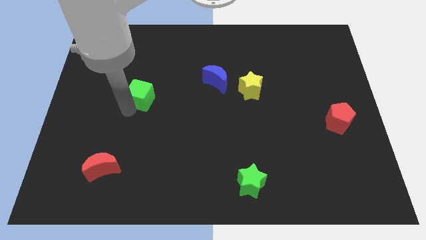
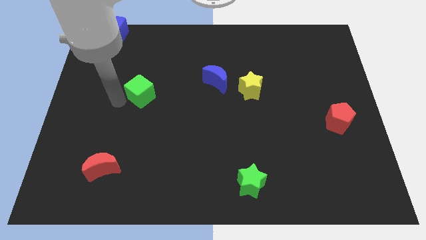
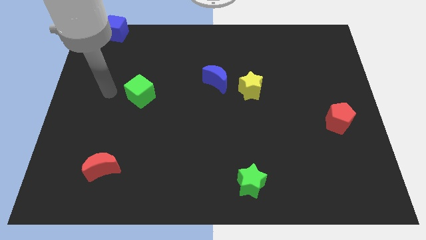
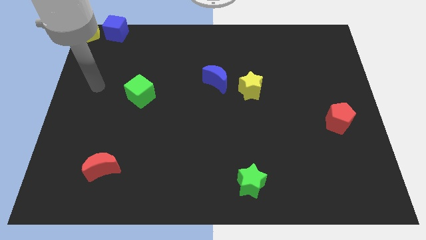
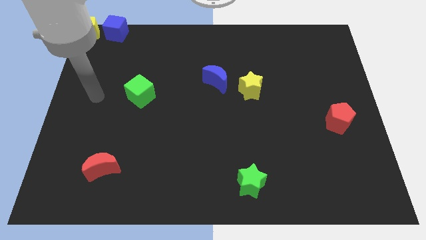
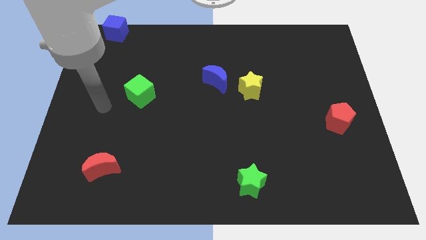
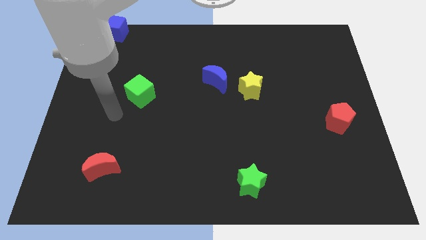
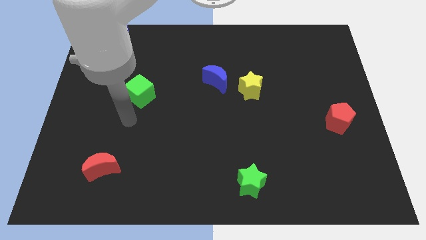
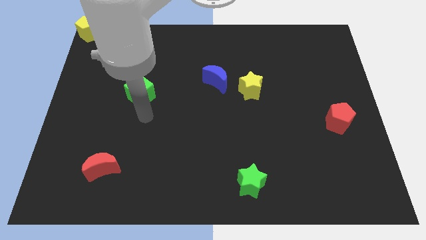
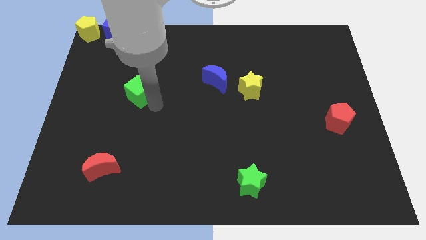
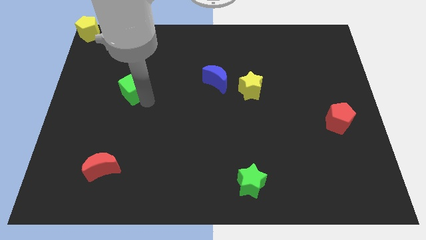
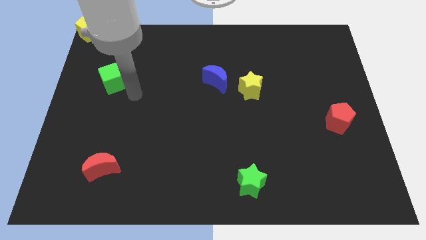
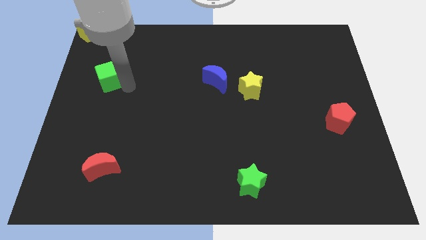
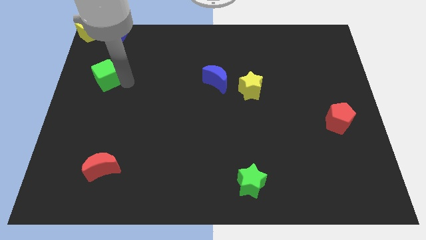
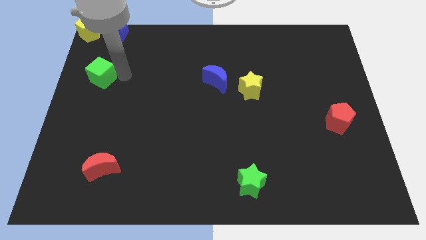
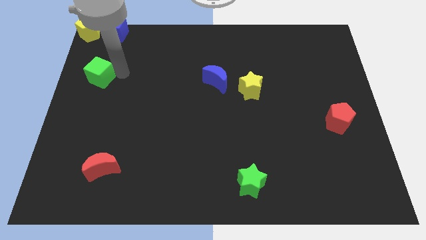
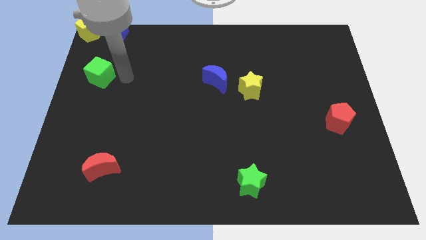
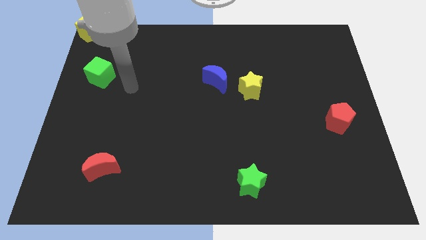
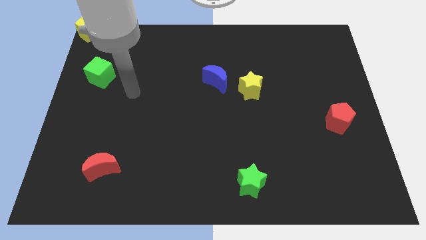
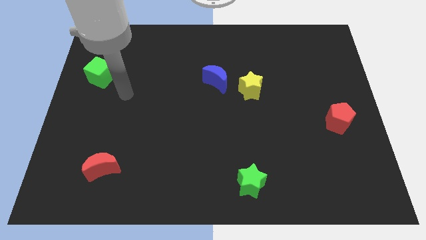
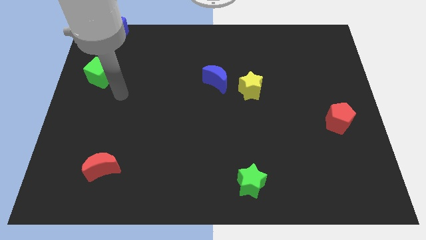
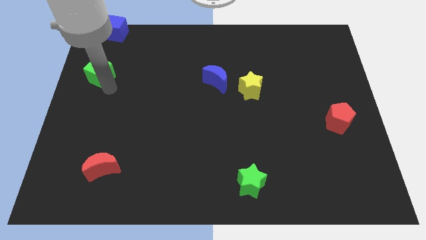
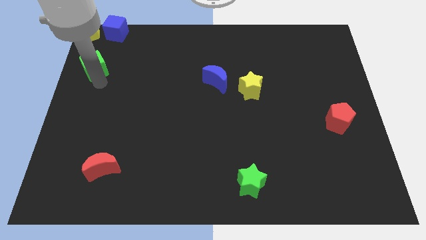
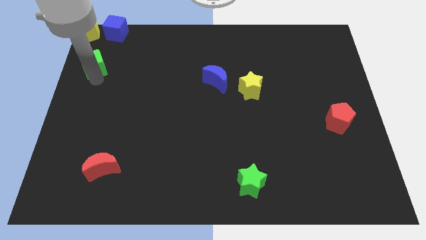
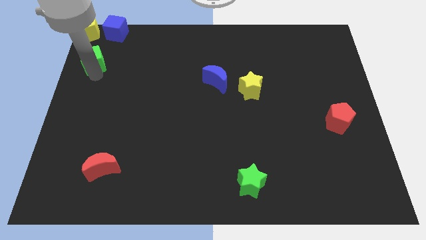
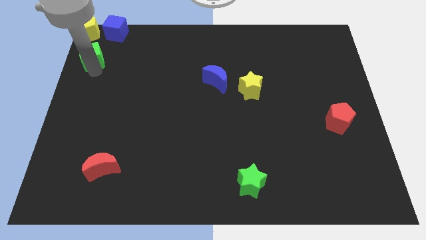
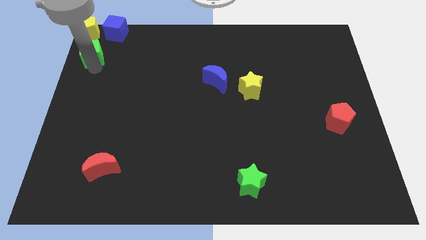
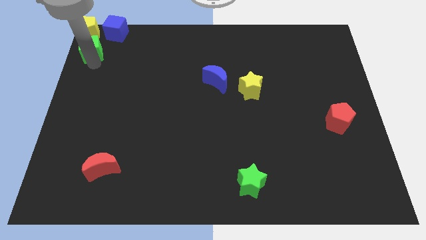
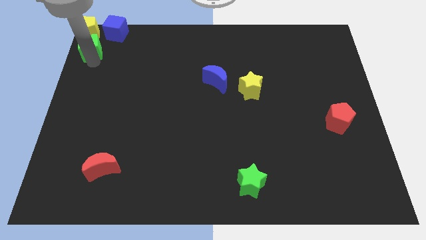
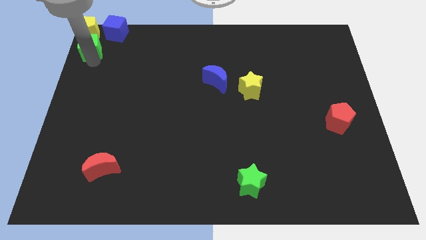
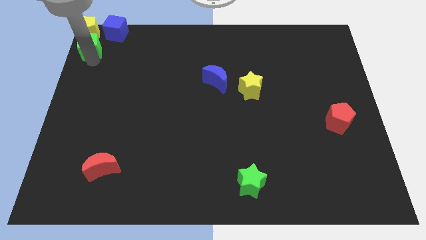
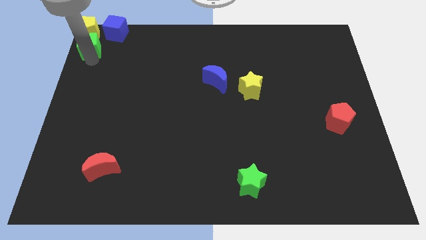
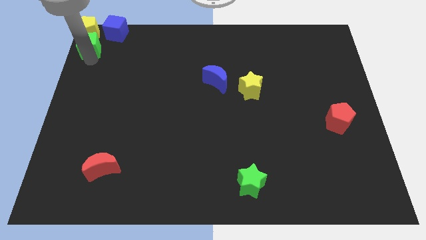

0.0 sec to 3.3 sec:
move the green cube towards top left corner

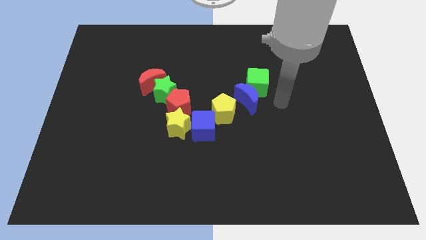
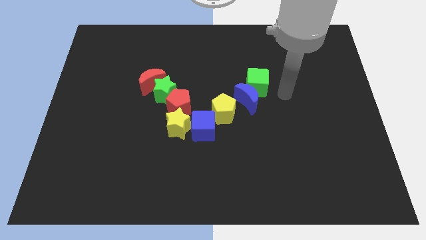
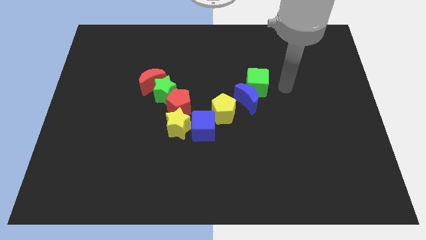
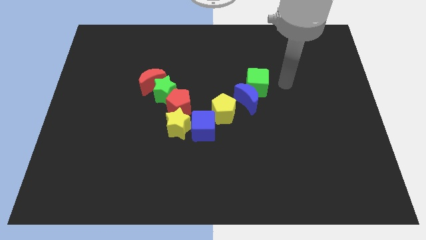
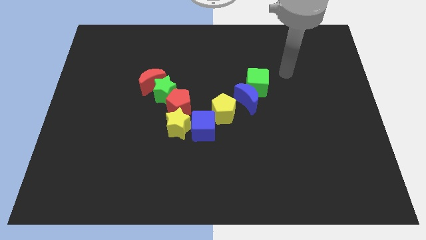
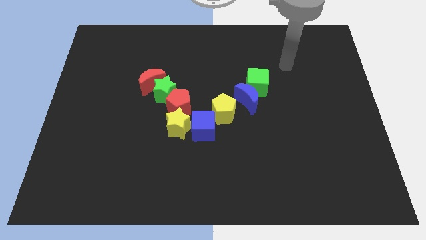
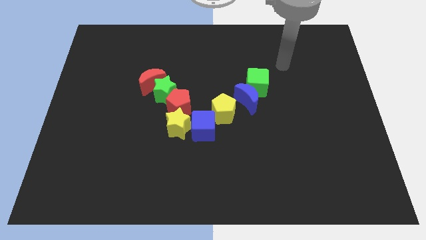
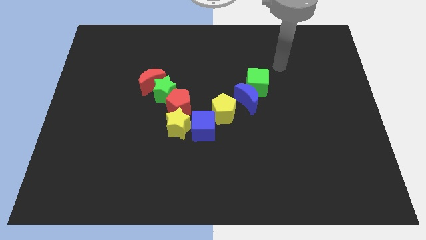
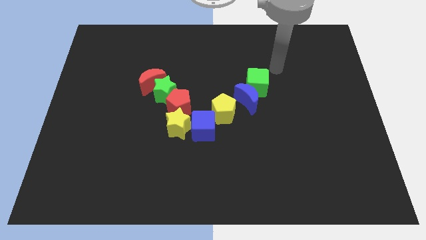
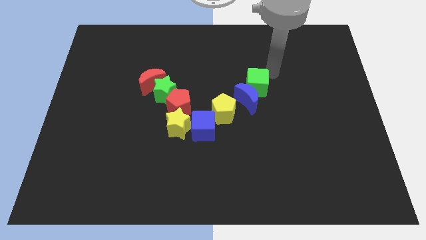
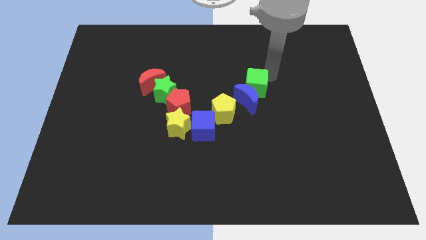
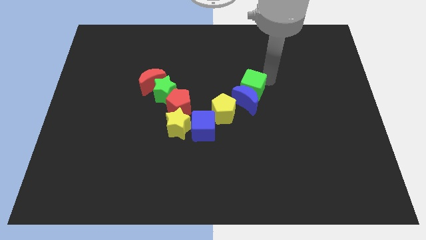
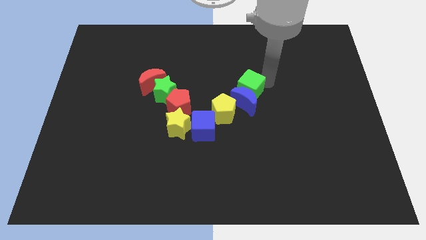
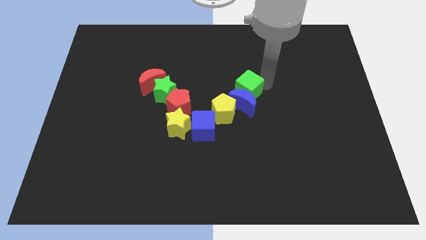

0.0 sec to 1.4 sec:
push the green cube into blue crescent

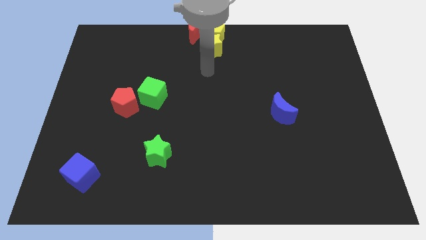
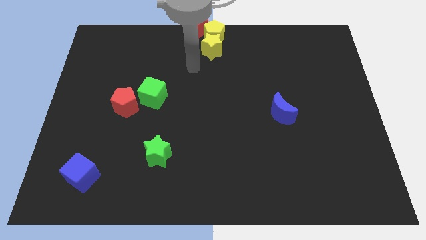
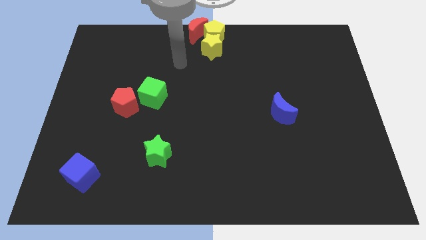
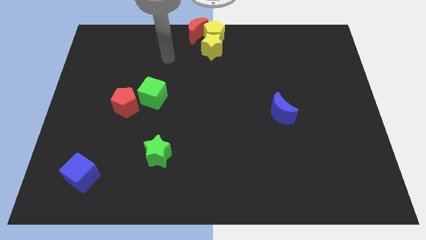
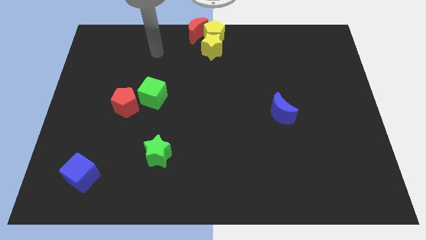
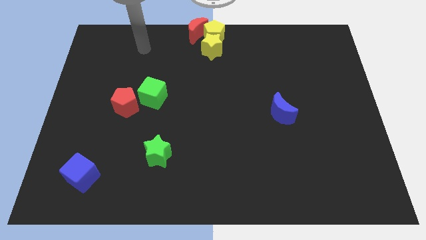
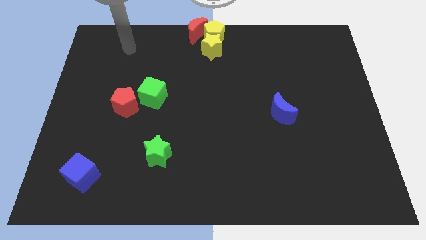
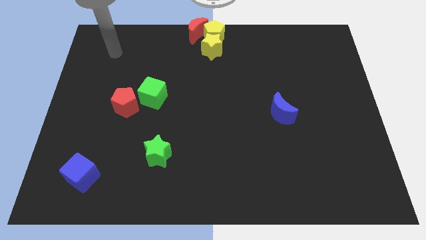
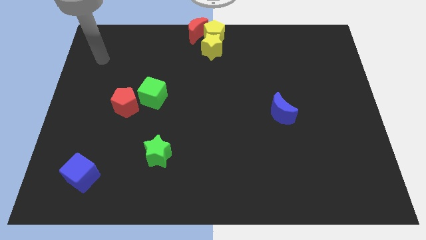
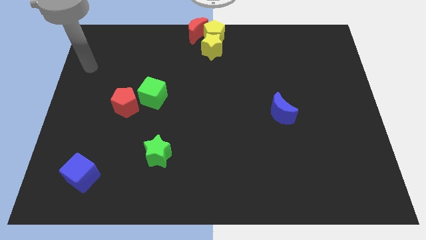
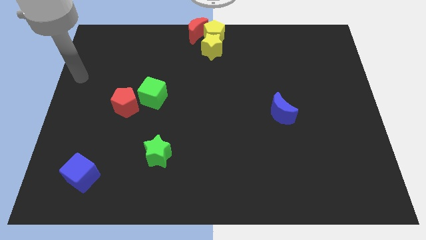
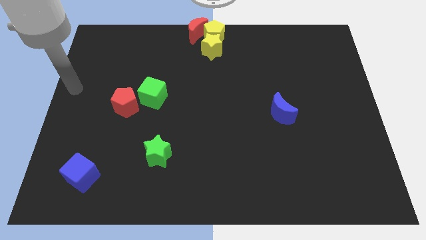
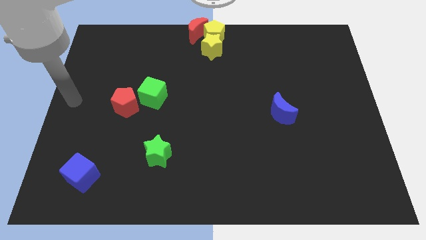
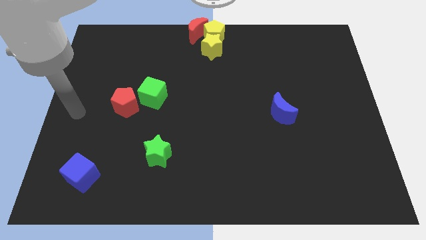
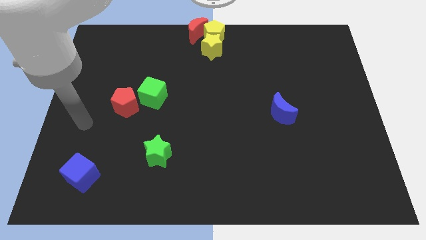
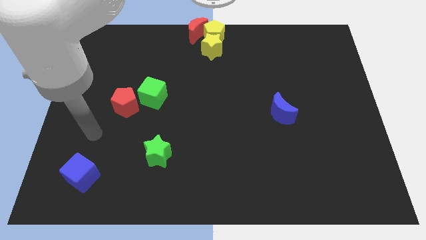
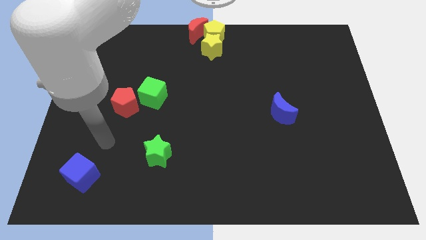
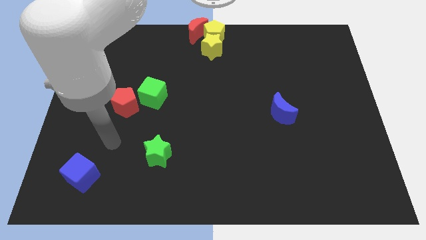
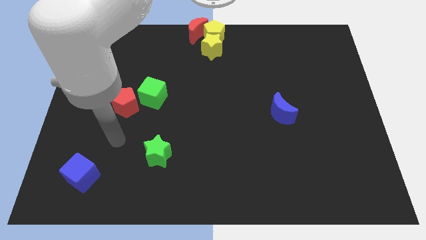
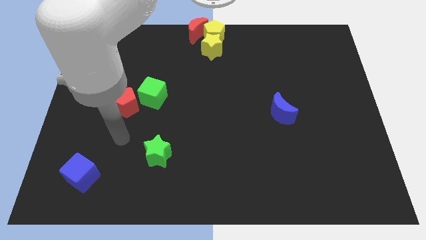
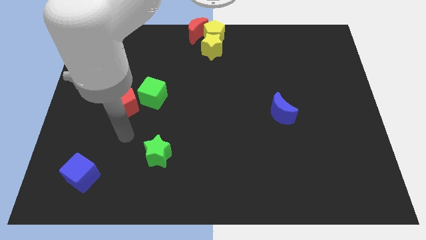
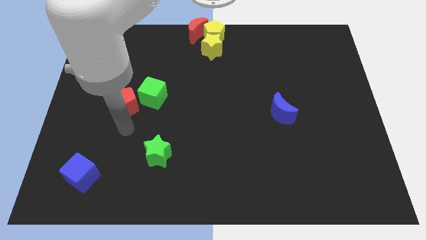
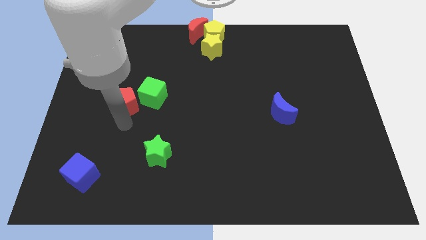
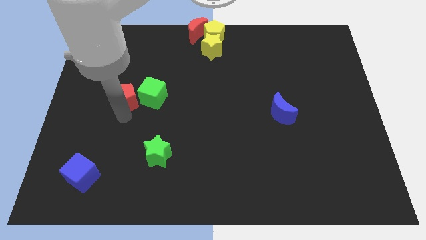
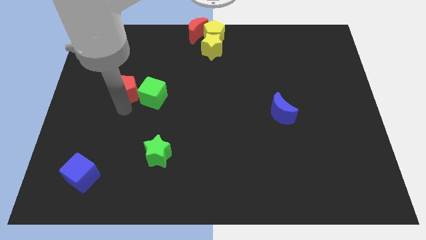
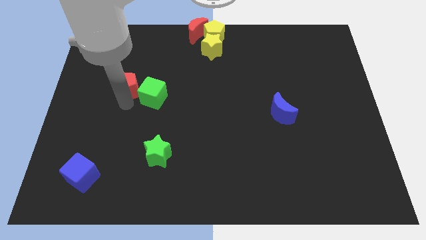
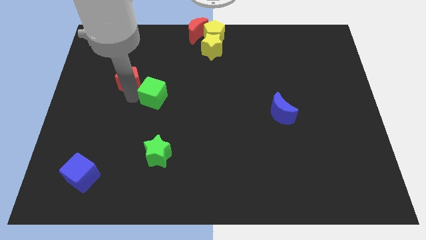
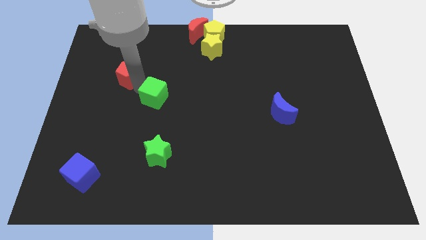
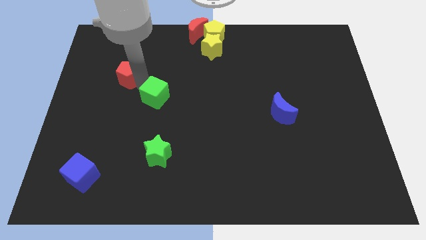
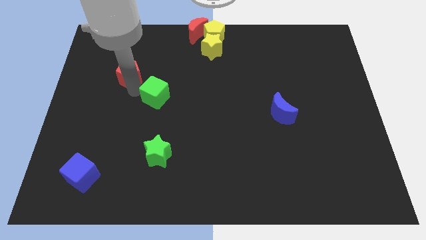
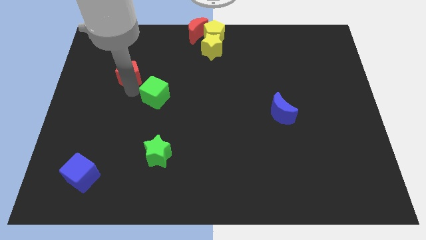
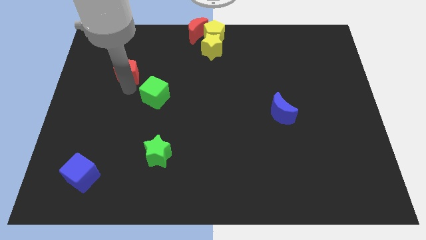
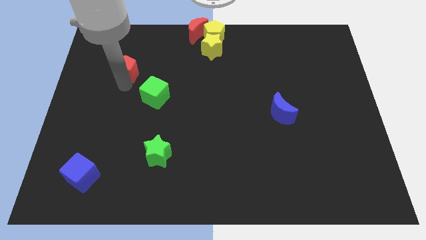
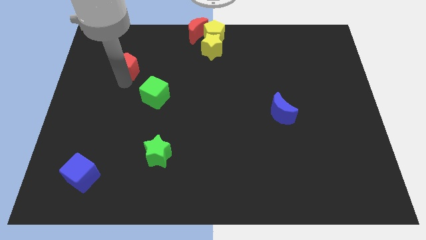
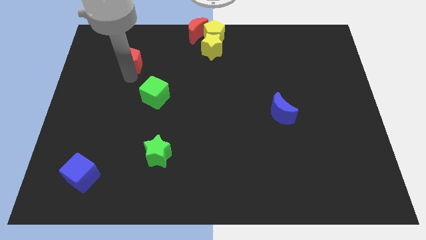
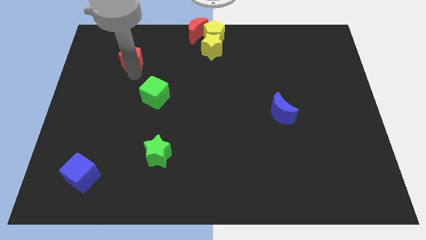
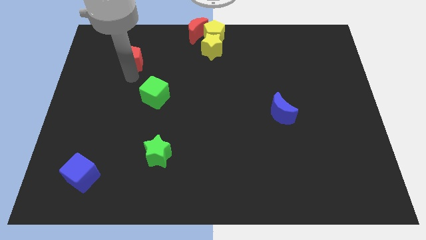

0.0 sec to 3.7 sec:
place the red pentagon diagonally to the top left of the green cube

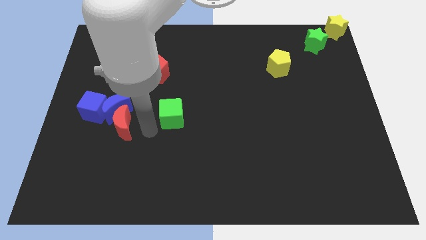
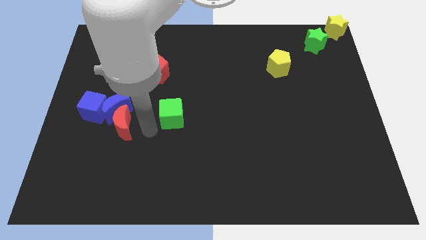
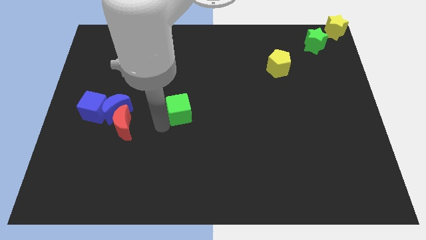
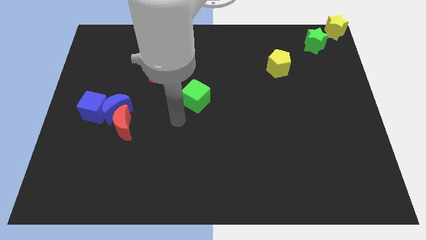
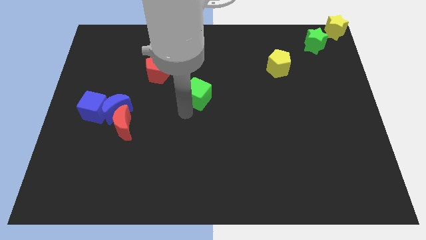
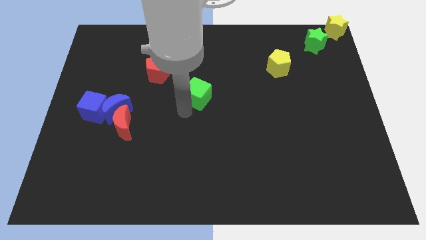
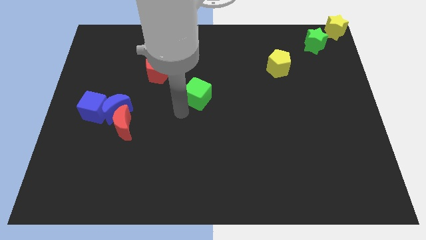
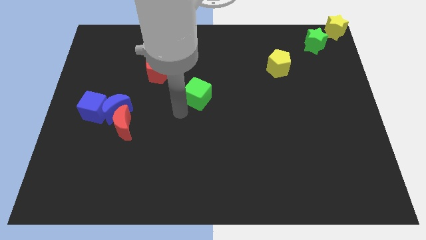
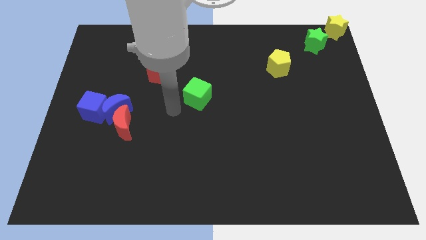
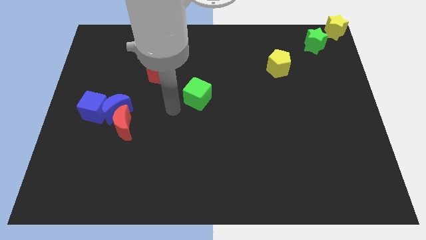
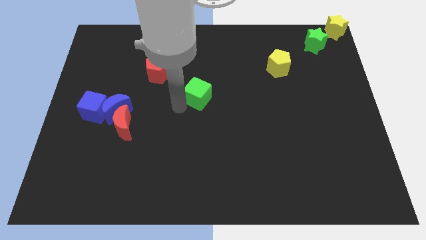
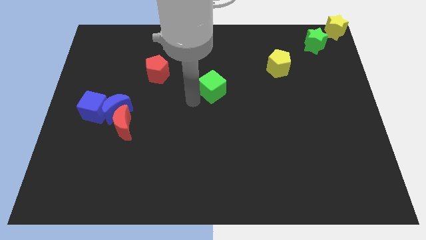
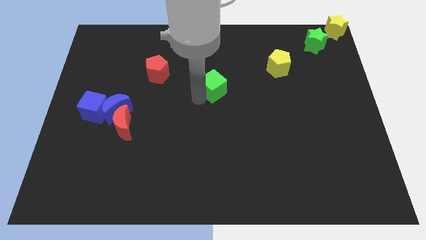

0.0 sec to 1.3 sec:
push the green cube to the center of the board
